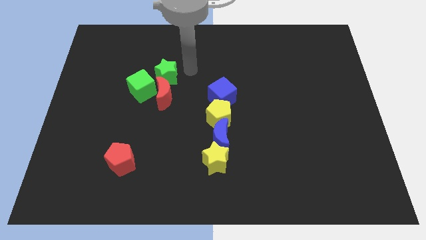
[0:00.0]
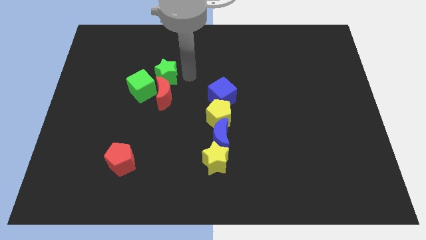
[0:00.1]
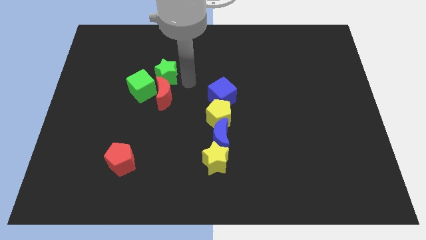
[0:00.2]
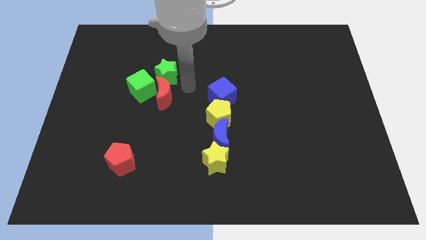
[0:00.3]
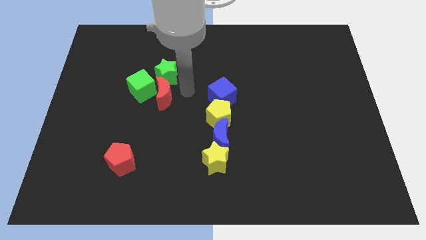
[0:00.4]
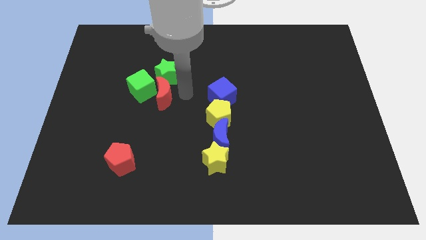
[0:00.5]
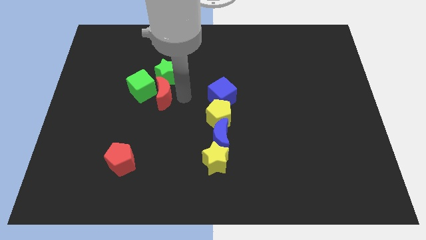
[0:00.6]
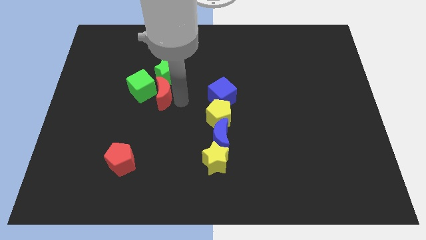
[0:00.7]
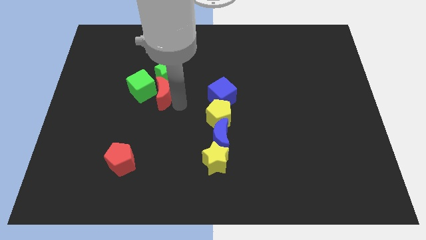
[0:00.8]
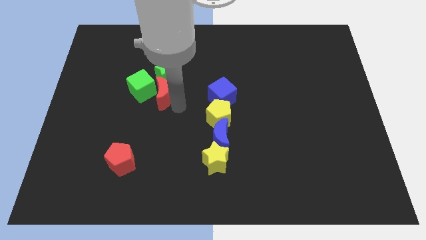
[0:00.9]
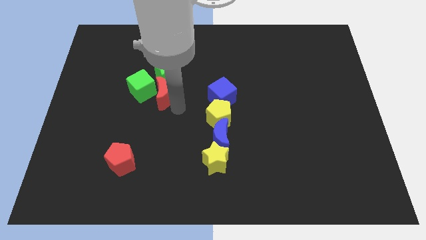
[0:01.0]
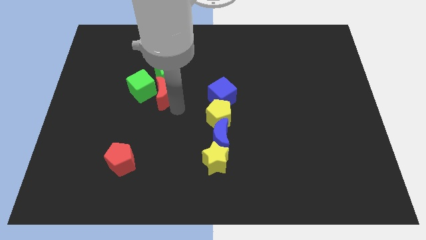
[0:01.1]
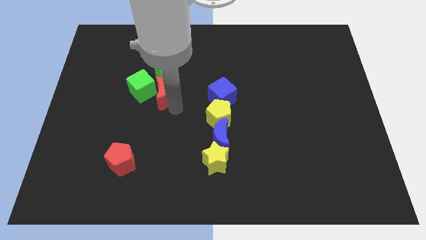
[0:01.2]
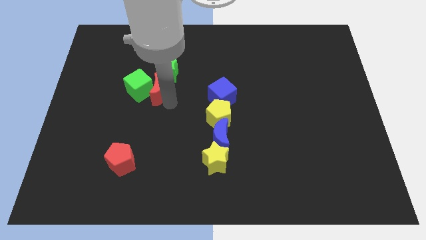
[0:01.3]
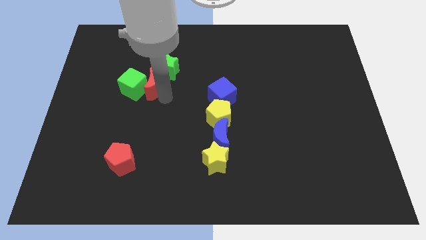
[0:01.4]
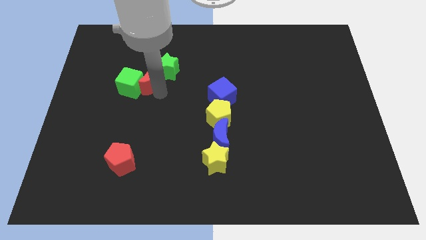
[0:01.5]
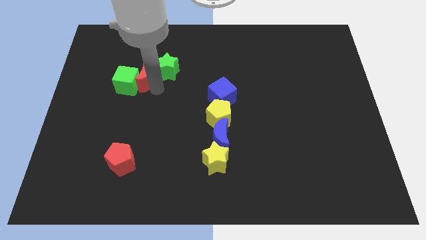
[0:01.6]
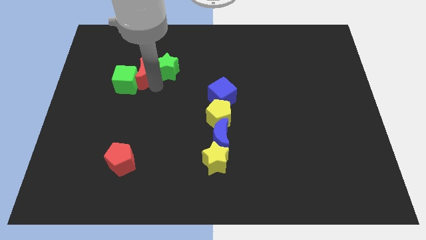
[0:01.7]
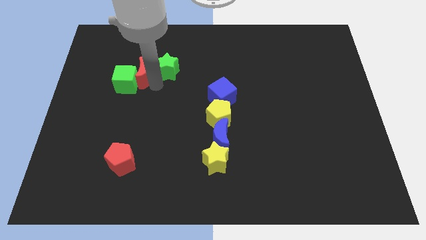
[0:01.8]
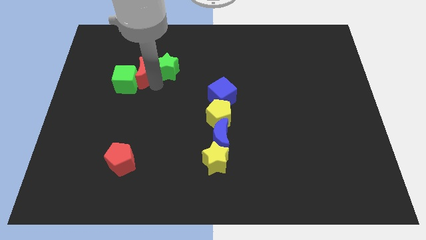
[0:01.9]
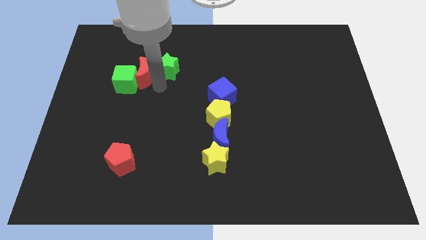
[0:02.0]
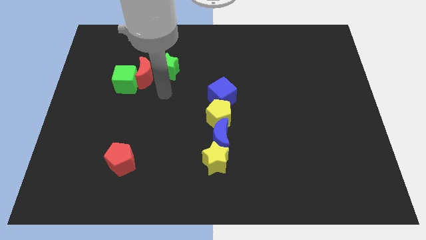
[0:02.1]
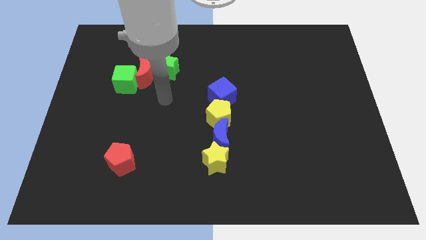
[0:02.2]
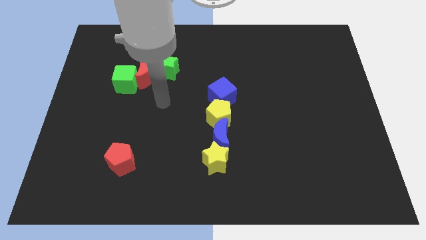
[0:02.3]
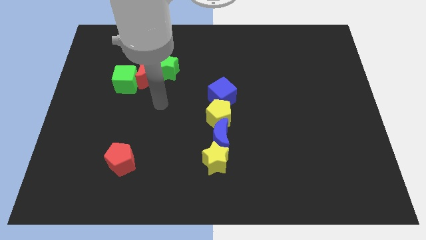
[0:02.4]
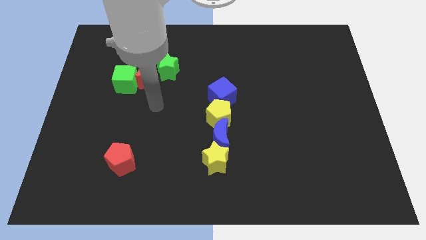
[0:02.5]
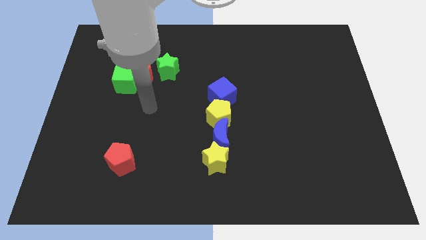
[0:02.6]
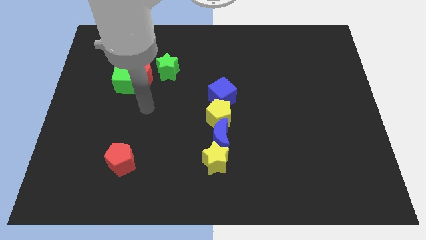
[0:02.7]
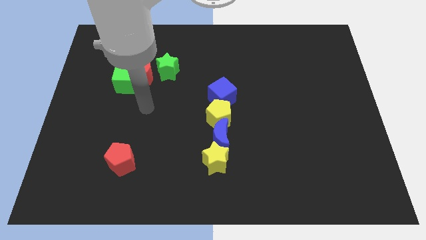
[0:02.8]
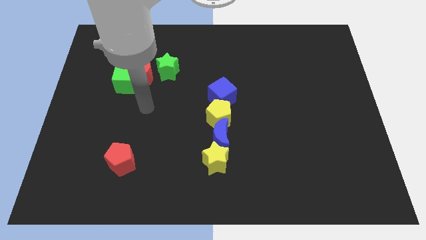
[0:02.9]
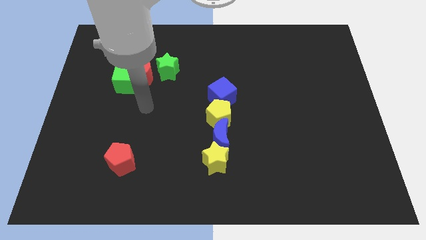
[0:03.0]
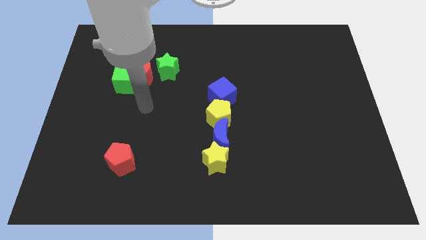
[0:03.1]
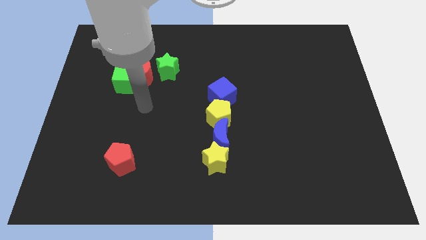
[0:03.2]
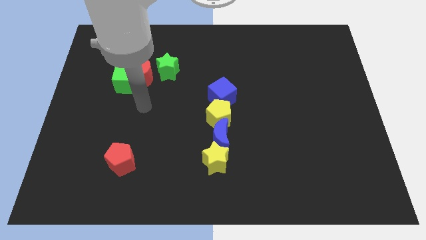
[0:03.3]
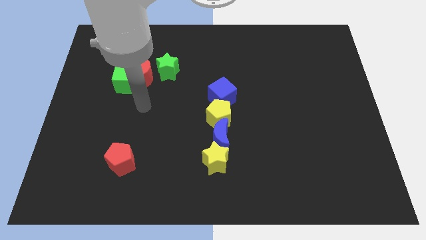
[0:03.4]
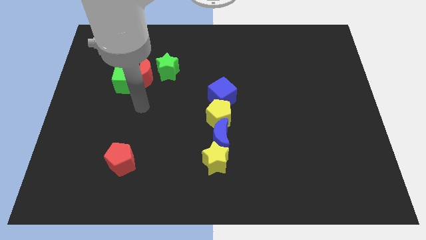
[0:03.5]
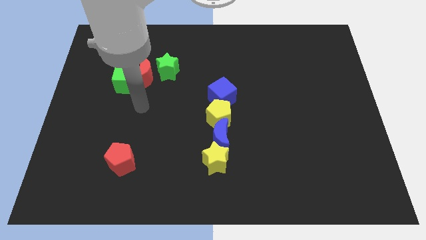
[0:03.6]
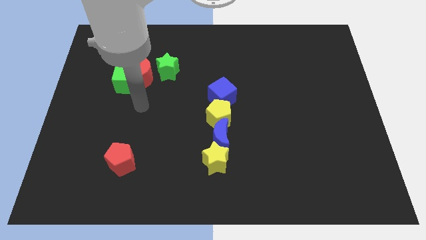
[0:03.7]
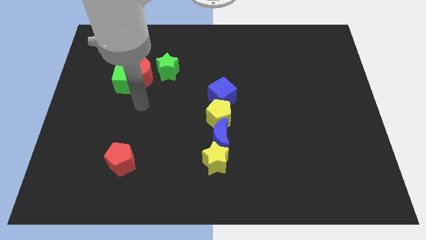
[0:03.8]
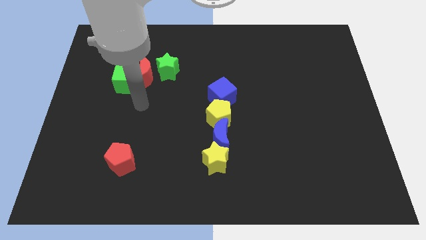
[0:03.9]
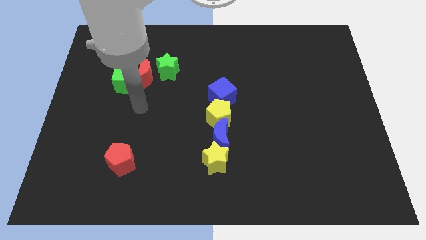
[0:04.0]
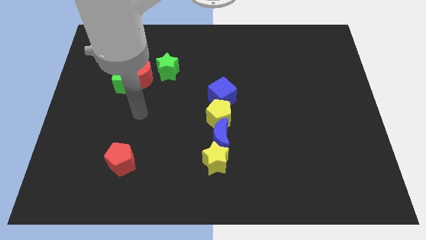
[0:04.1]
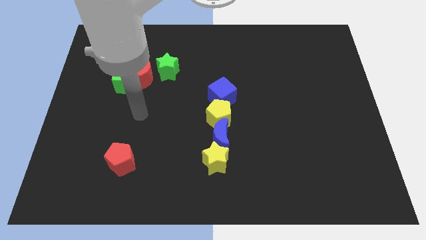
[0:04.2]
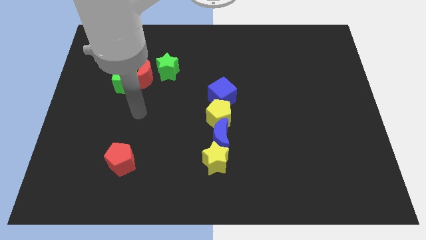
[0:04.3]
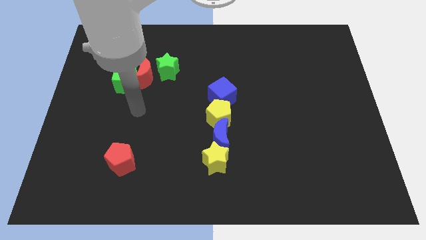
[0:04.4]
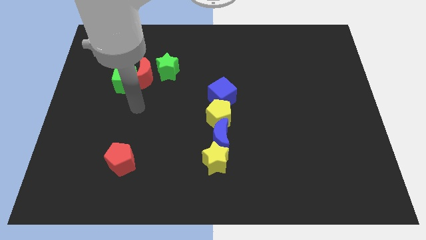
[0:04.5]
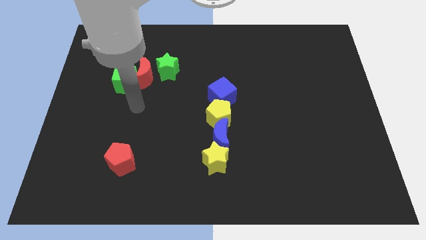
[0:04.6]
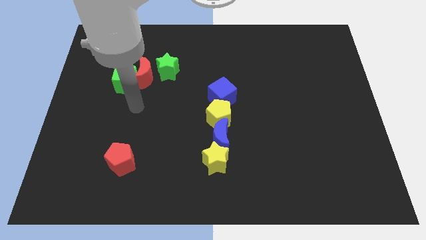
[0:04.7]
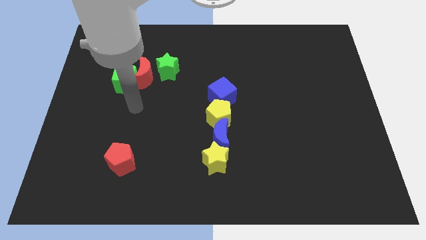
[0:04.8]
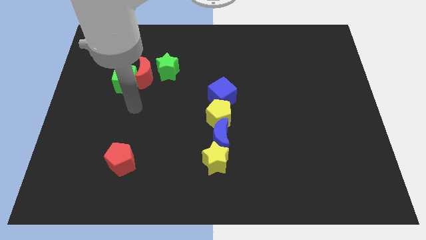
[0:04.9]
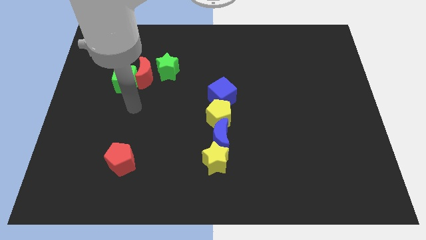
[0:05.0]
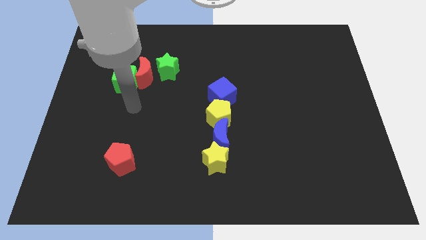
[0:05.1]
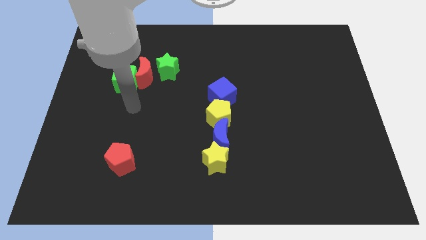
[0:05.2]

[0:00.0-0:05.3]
place the red moon in between green blocks

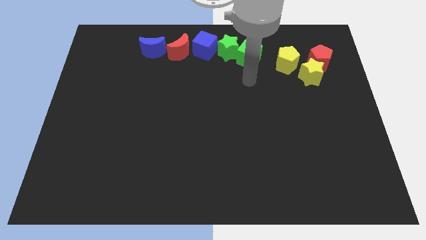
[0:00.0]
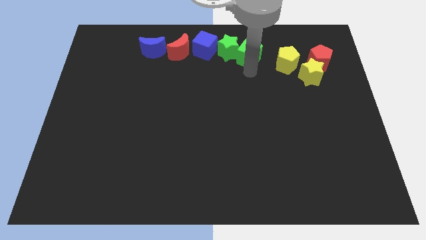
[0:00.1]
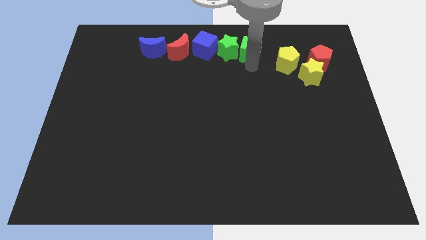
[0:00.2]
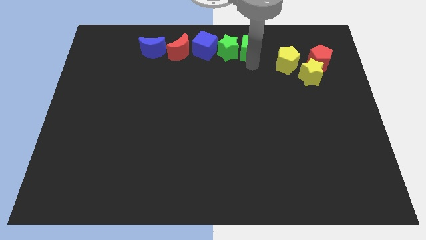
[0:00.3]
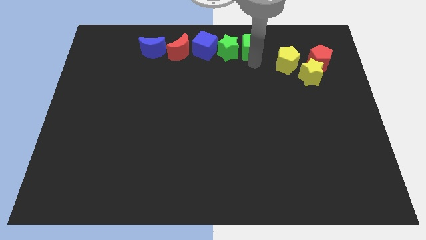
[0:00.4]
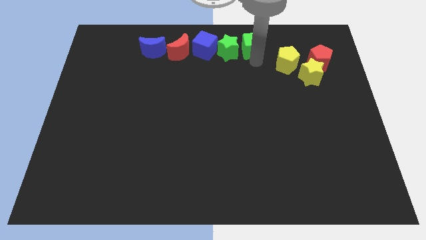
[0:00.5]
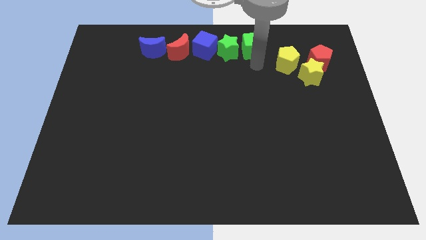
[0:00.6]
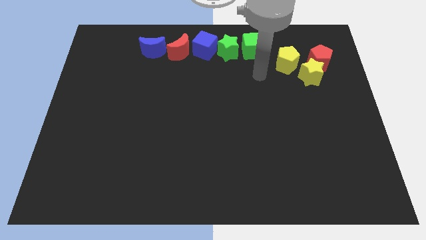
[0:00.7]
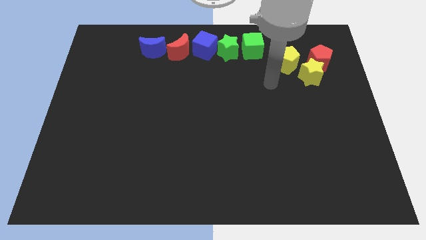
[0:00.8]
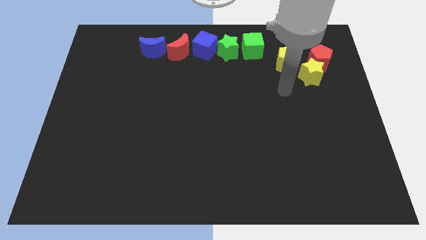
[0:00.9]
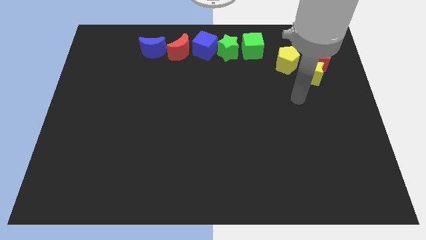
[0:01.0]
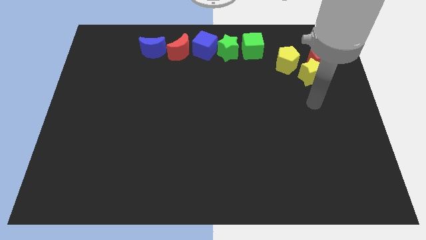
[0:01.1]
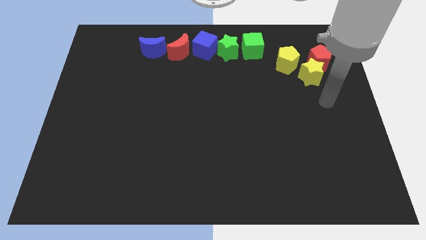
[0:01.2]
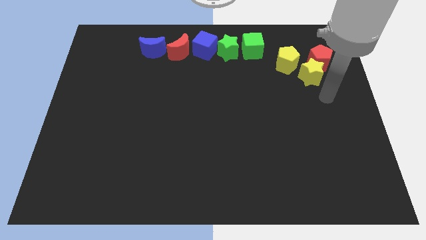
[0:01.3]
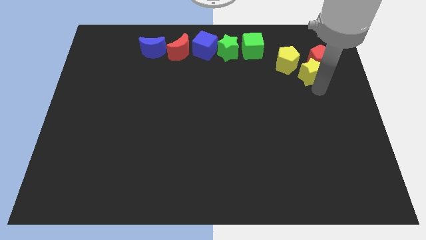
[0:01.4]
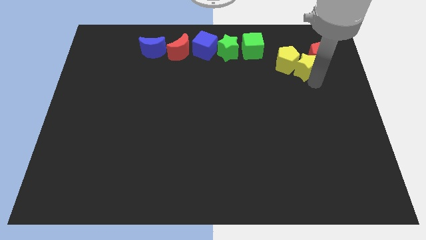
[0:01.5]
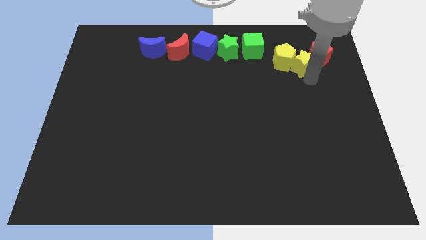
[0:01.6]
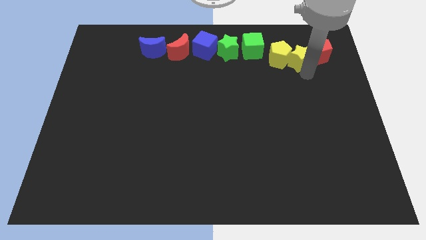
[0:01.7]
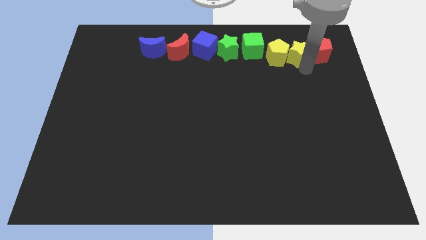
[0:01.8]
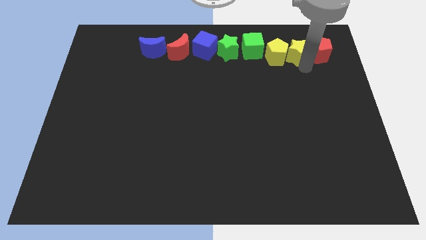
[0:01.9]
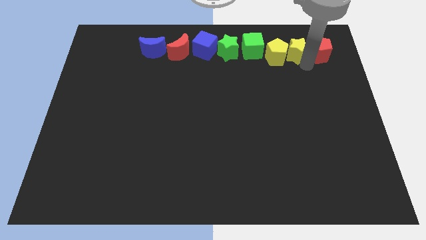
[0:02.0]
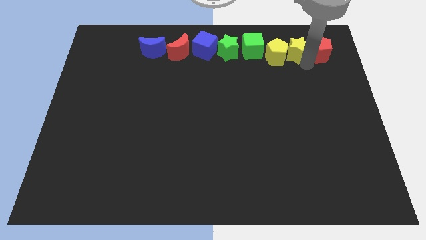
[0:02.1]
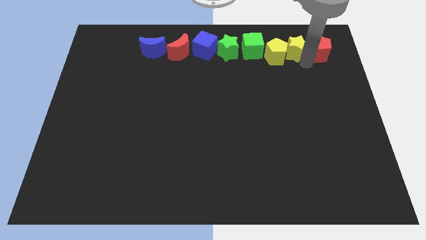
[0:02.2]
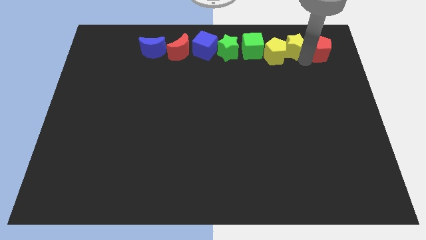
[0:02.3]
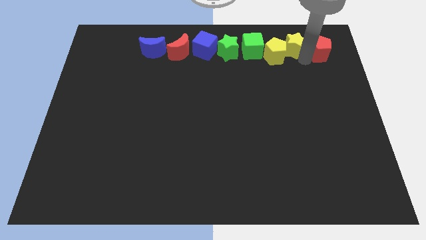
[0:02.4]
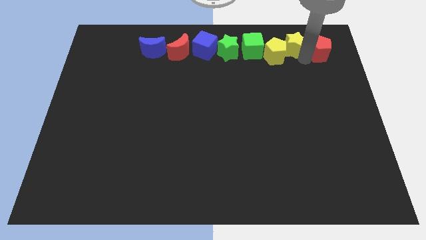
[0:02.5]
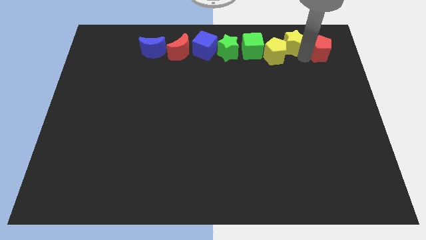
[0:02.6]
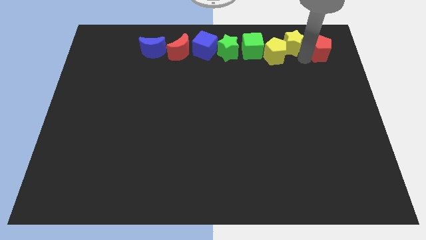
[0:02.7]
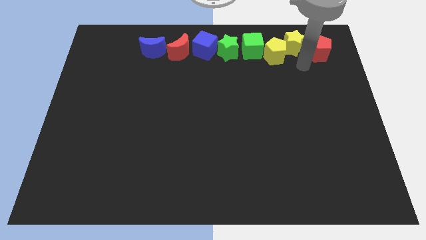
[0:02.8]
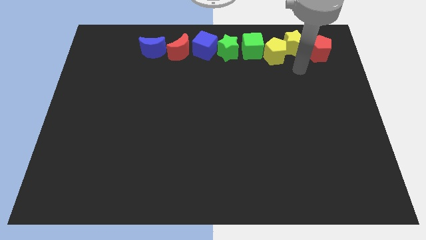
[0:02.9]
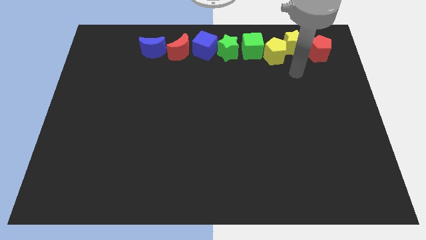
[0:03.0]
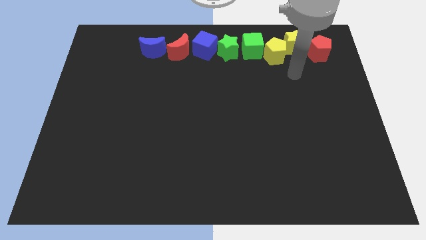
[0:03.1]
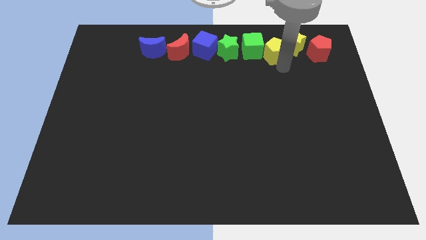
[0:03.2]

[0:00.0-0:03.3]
move yellow star along with yellow pentagon right to the green cube

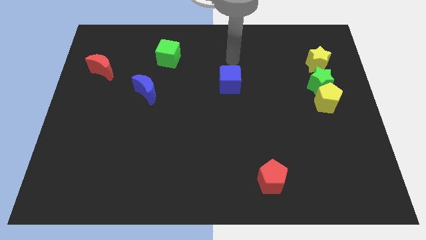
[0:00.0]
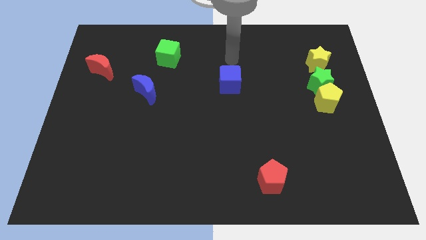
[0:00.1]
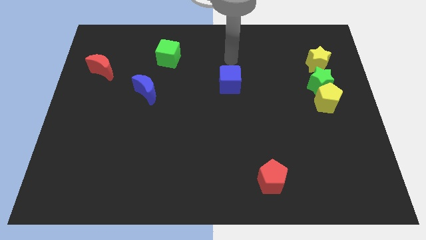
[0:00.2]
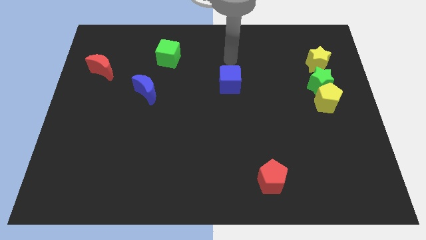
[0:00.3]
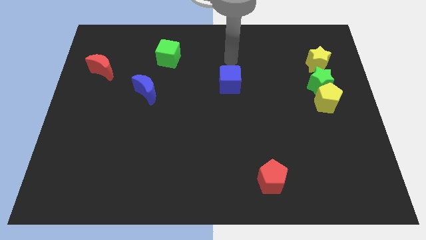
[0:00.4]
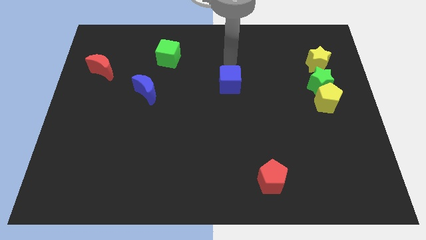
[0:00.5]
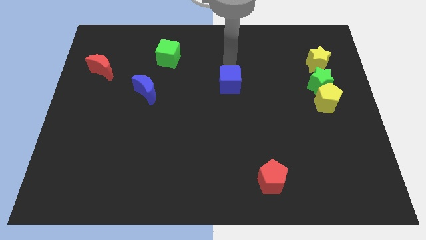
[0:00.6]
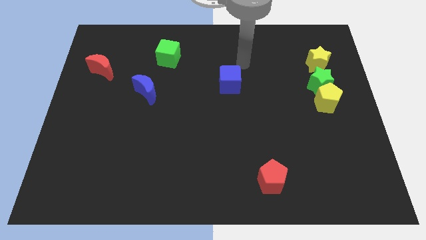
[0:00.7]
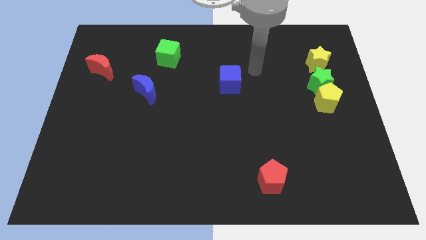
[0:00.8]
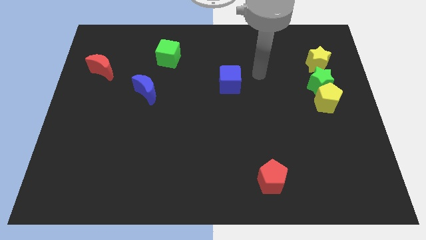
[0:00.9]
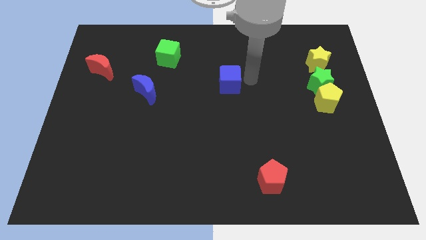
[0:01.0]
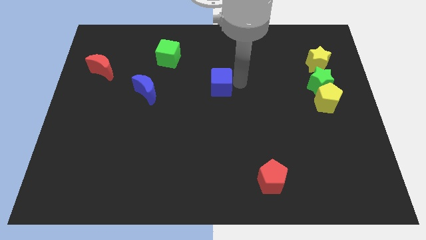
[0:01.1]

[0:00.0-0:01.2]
place your arm to the right of blue cube
